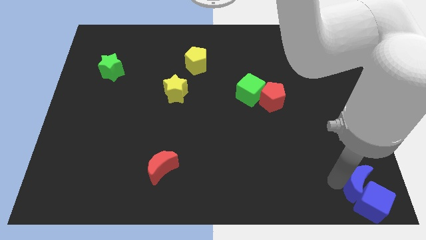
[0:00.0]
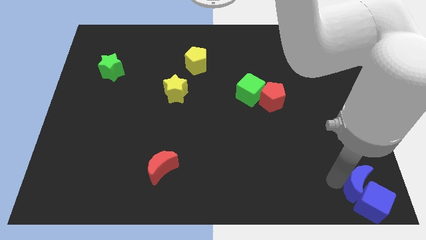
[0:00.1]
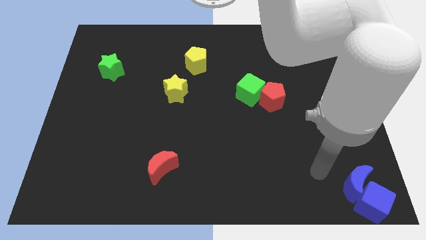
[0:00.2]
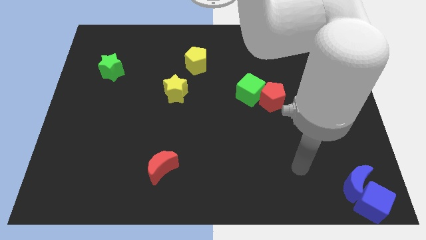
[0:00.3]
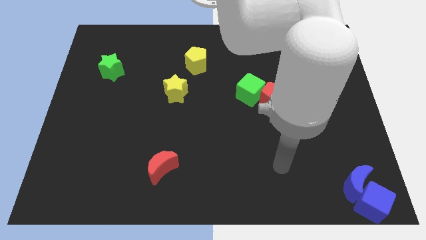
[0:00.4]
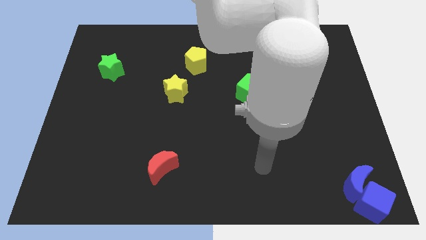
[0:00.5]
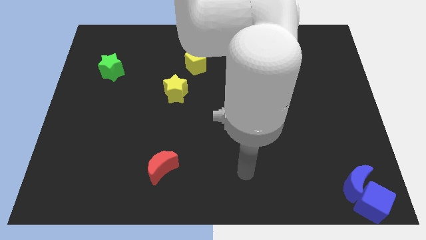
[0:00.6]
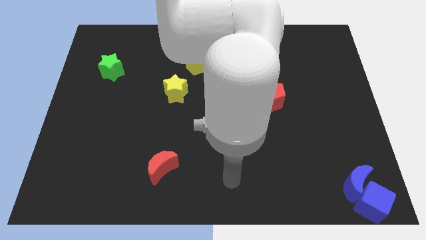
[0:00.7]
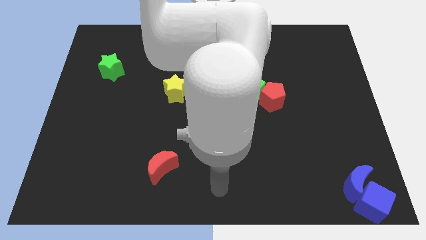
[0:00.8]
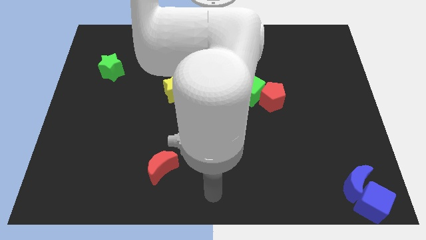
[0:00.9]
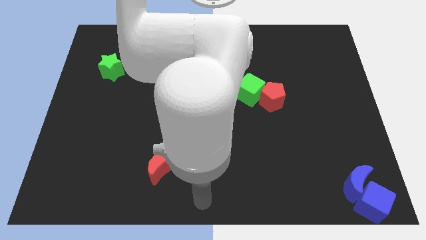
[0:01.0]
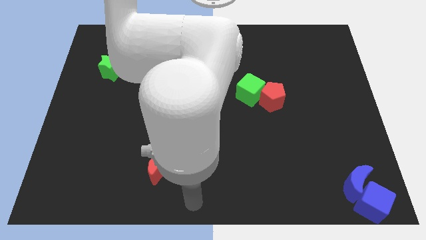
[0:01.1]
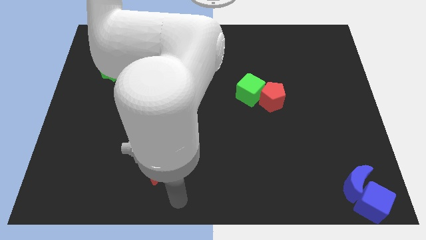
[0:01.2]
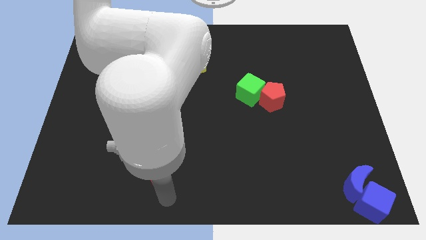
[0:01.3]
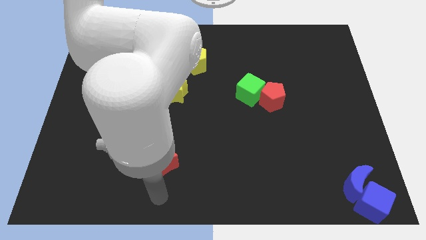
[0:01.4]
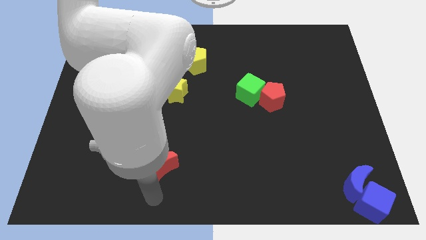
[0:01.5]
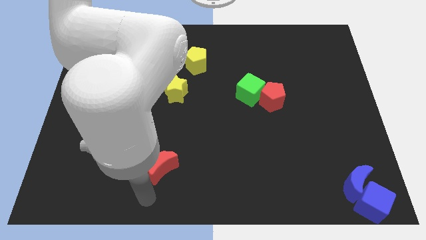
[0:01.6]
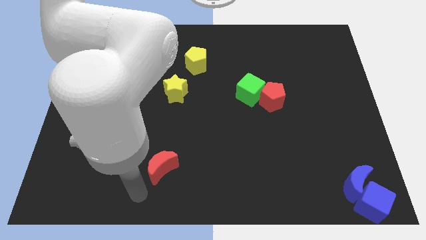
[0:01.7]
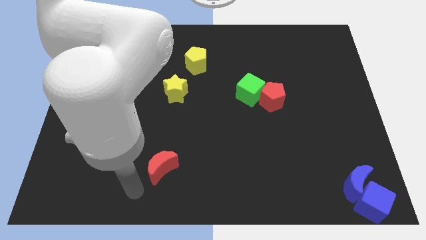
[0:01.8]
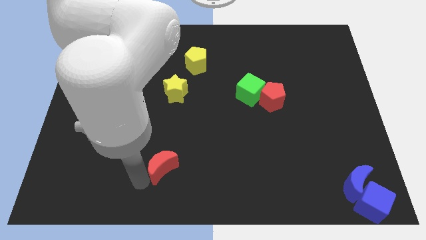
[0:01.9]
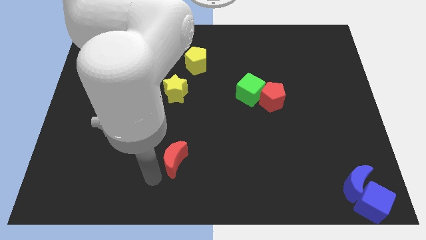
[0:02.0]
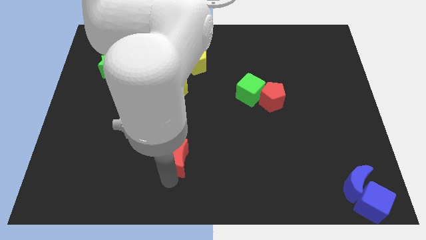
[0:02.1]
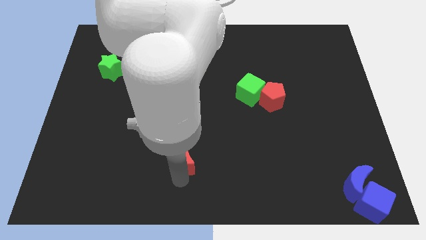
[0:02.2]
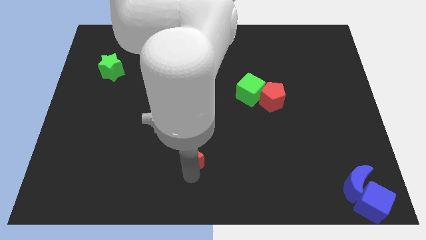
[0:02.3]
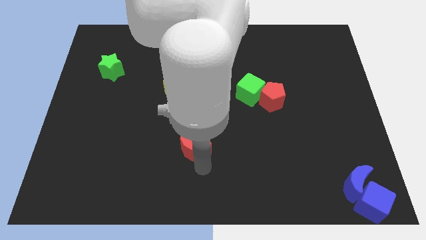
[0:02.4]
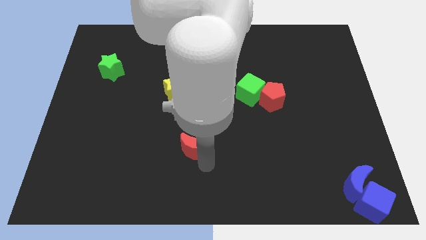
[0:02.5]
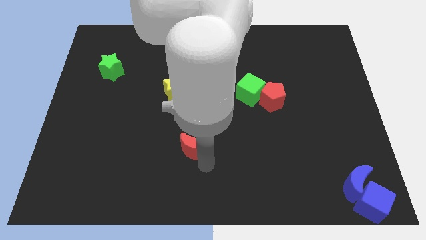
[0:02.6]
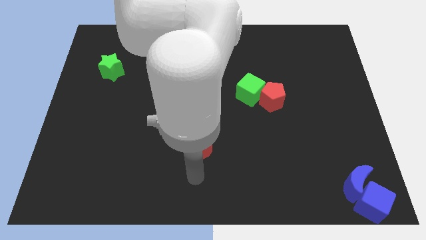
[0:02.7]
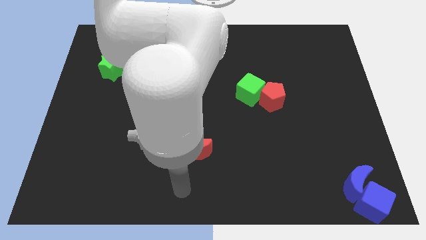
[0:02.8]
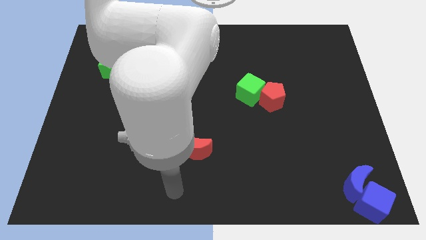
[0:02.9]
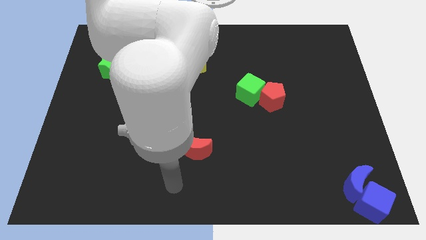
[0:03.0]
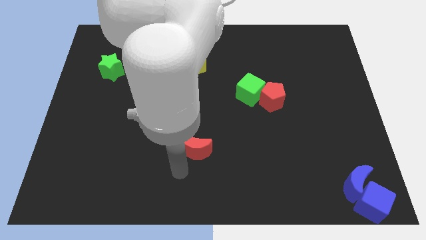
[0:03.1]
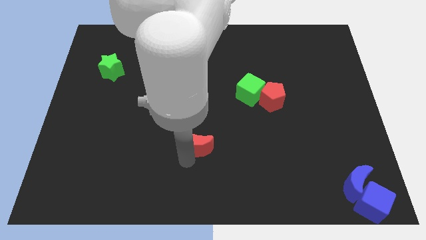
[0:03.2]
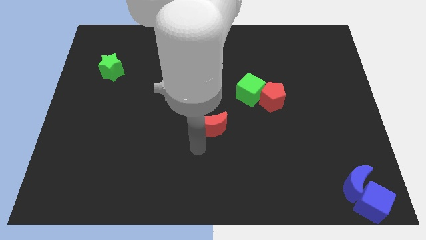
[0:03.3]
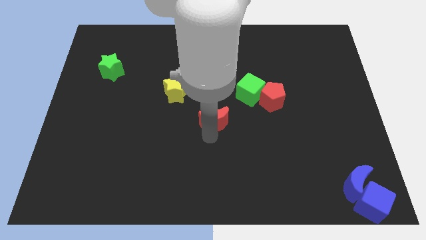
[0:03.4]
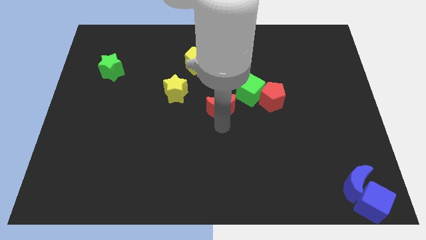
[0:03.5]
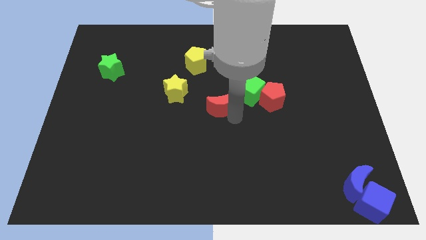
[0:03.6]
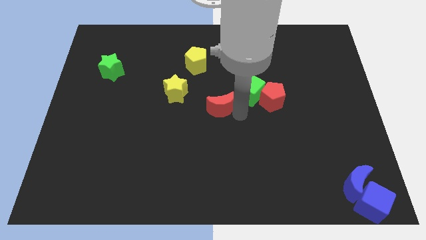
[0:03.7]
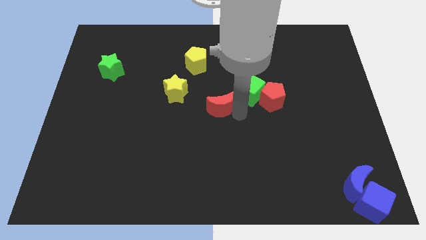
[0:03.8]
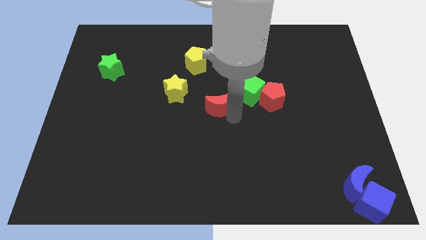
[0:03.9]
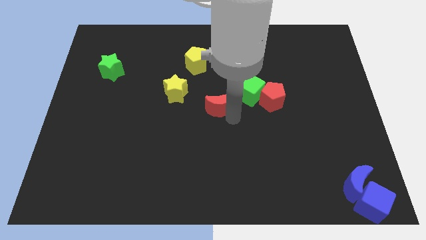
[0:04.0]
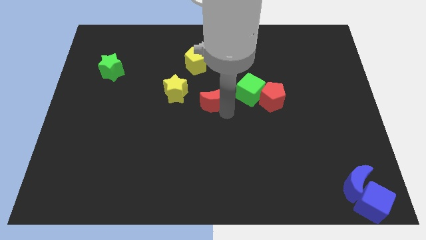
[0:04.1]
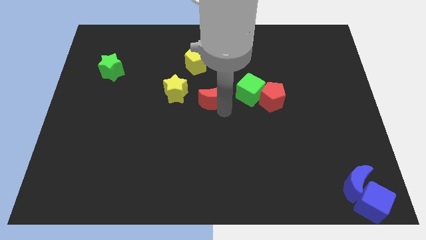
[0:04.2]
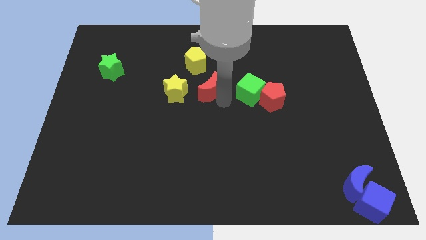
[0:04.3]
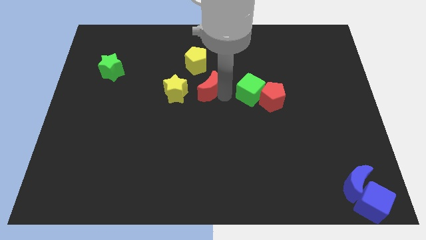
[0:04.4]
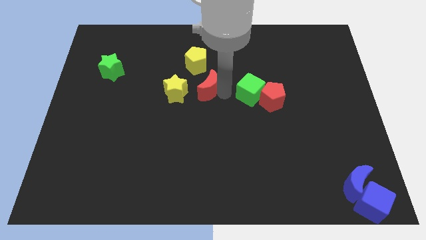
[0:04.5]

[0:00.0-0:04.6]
place the red moon beside the yellow star to form a line

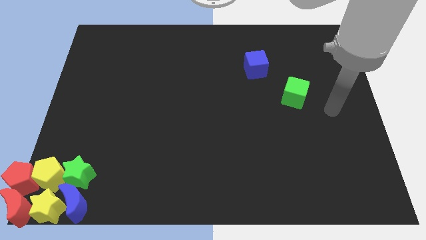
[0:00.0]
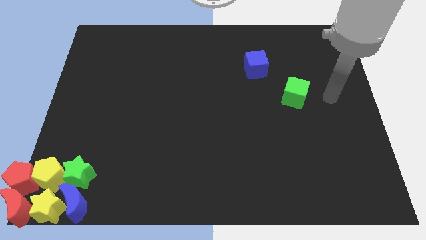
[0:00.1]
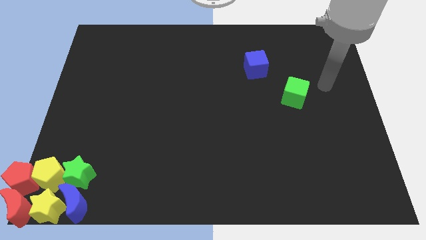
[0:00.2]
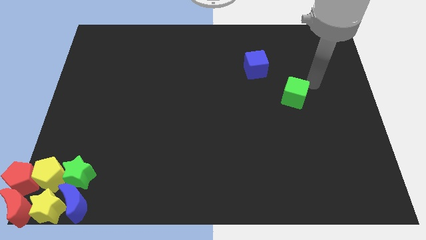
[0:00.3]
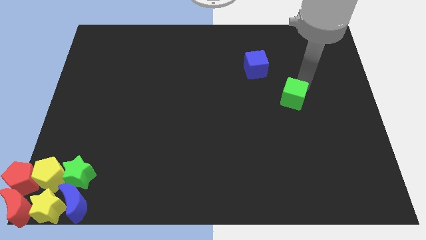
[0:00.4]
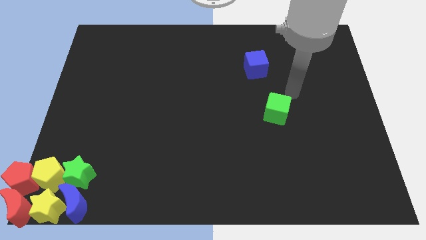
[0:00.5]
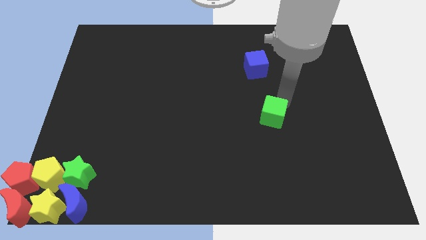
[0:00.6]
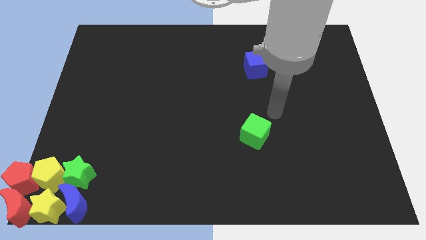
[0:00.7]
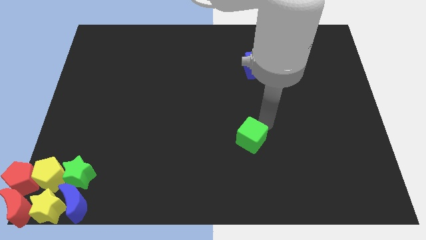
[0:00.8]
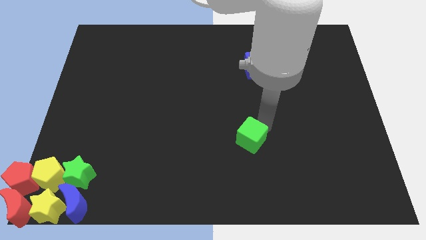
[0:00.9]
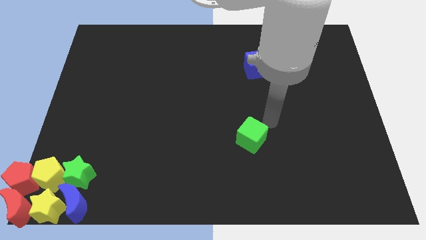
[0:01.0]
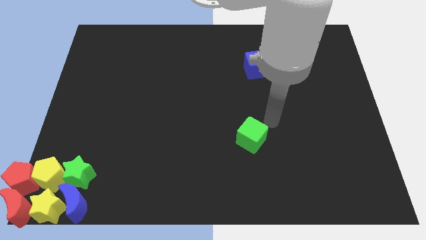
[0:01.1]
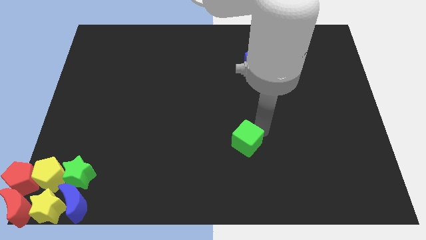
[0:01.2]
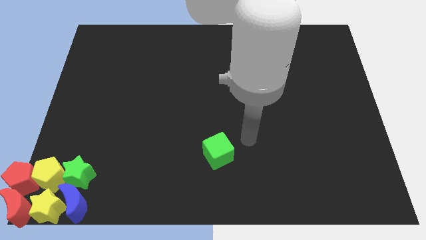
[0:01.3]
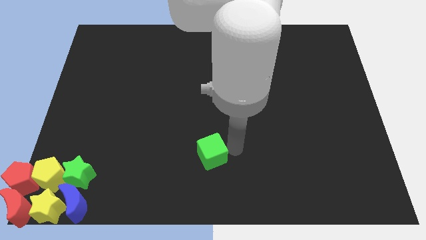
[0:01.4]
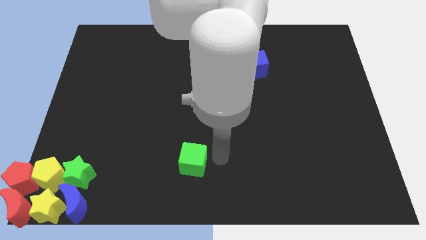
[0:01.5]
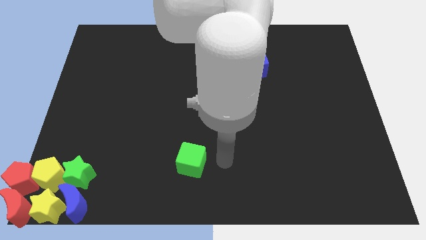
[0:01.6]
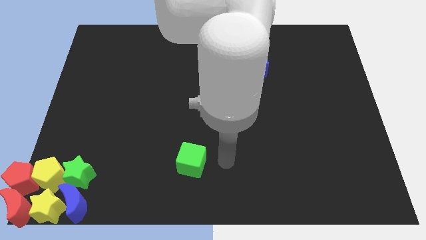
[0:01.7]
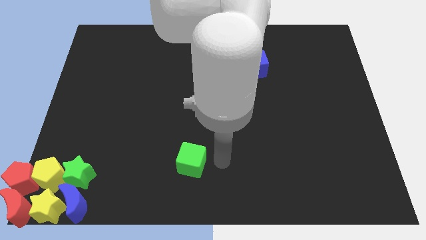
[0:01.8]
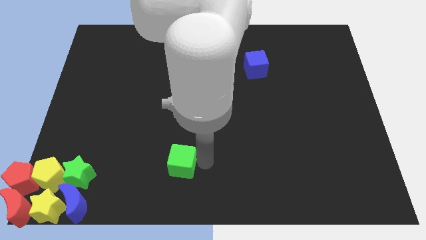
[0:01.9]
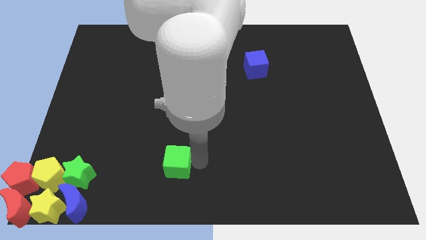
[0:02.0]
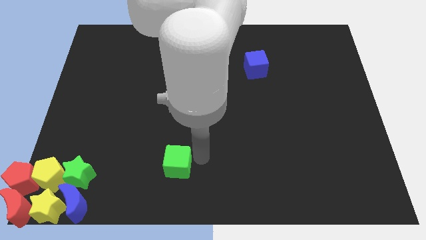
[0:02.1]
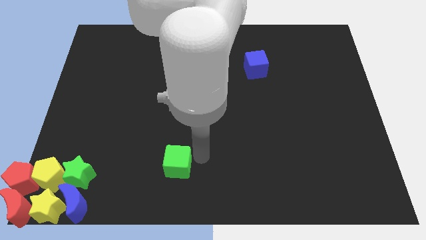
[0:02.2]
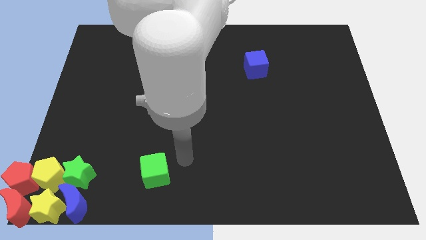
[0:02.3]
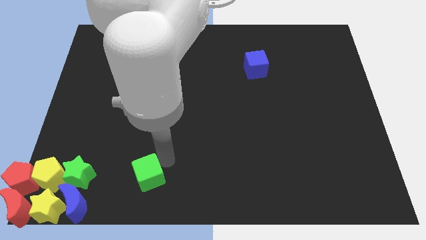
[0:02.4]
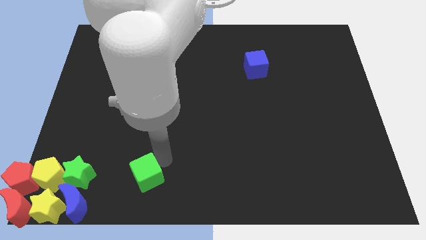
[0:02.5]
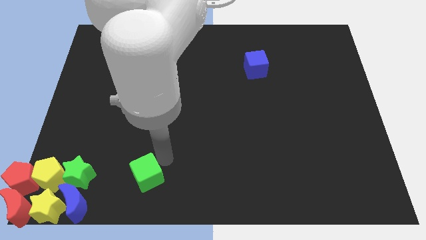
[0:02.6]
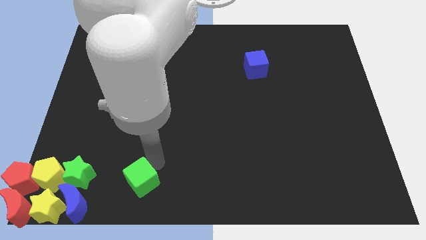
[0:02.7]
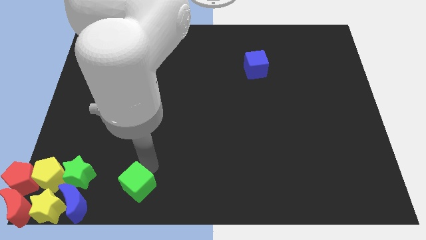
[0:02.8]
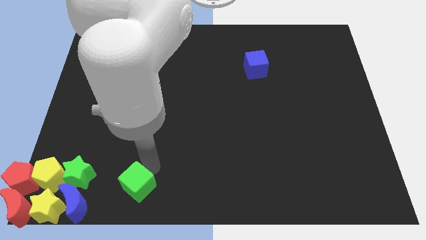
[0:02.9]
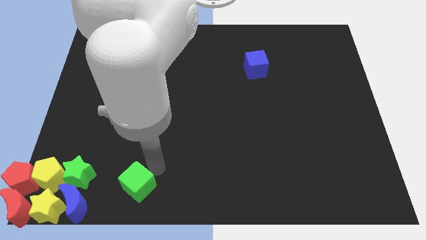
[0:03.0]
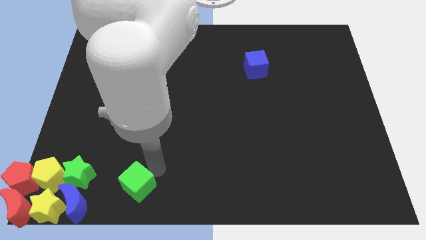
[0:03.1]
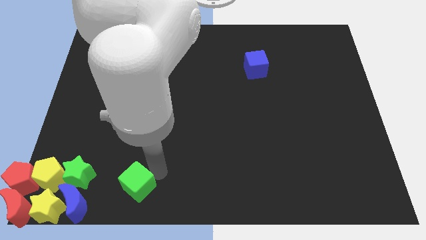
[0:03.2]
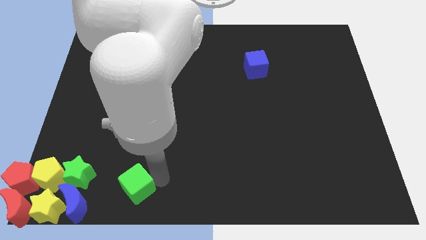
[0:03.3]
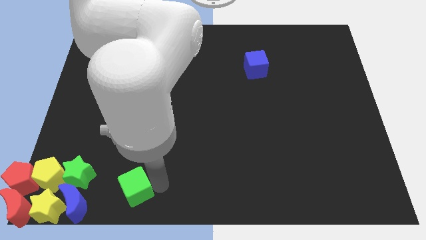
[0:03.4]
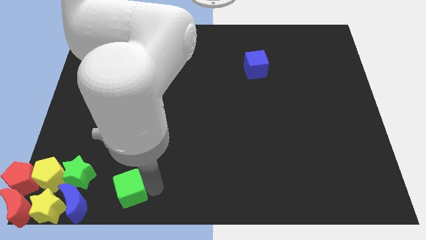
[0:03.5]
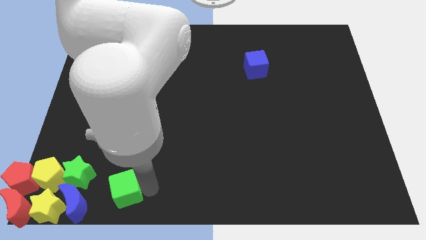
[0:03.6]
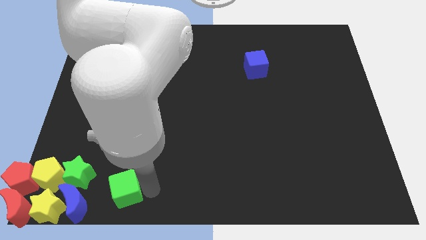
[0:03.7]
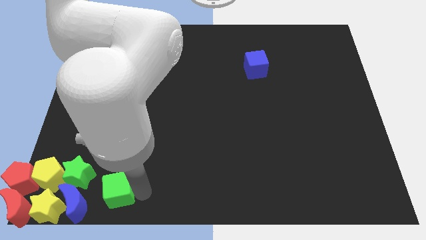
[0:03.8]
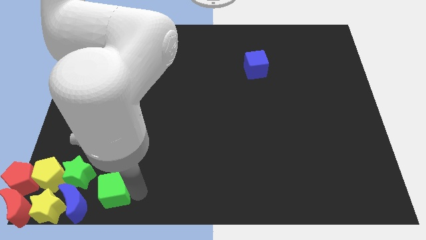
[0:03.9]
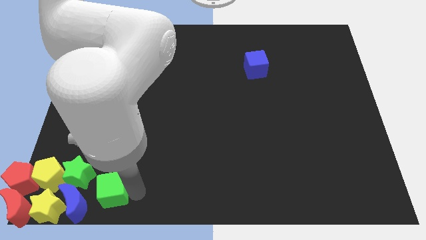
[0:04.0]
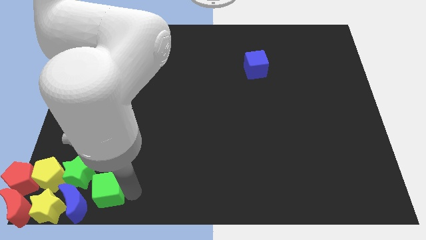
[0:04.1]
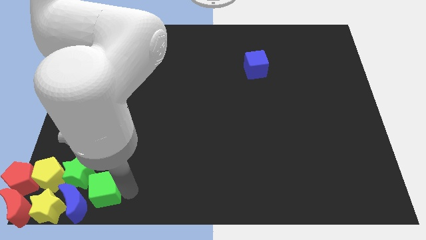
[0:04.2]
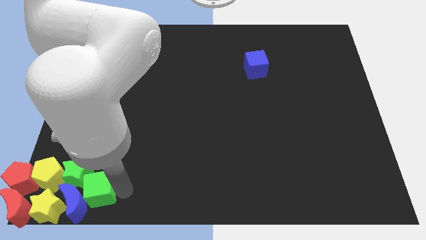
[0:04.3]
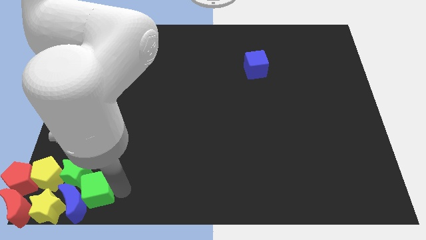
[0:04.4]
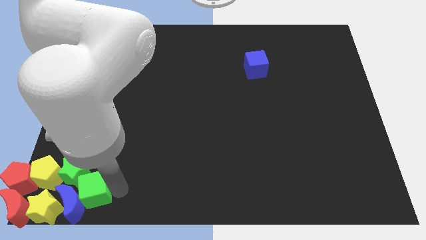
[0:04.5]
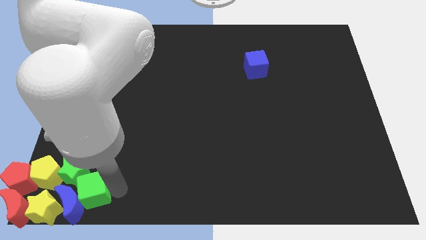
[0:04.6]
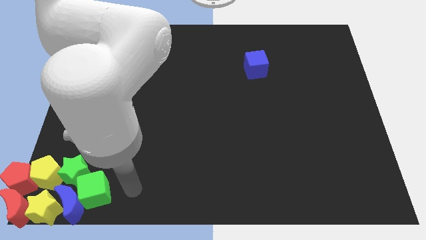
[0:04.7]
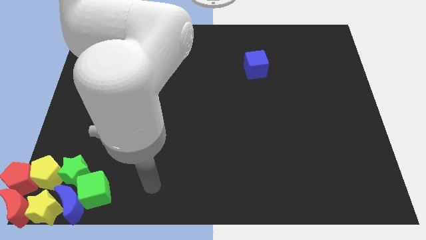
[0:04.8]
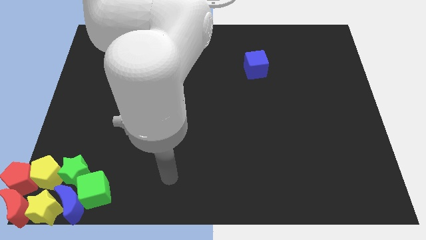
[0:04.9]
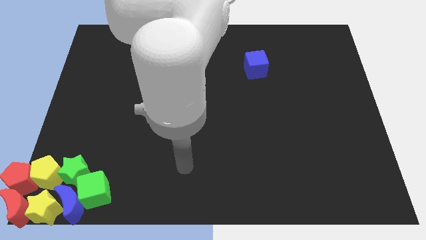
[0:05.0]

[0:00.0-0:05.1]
push green cube towards bottom left
